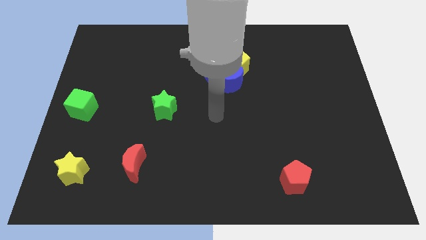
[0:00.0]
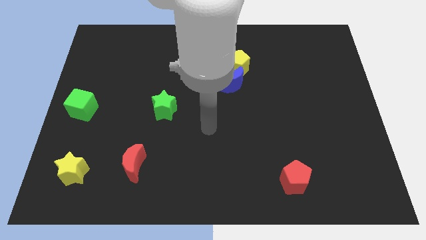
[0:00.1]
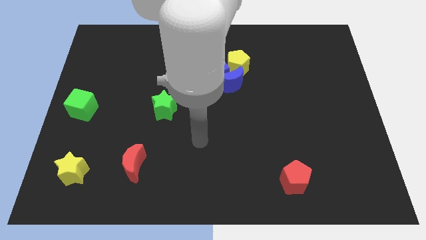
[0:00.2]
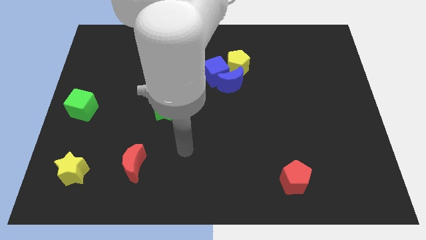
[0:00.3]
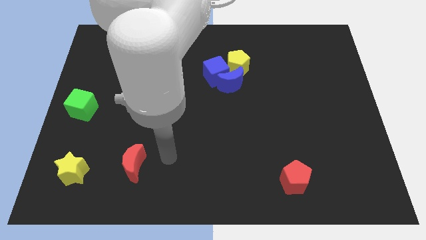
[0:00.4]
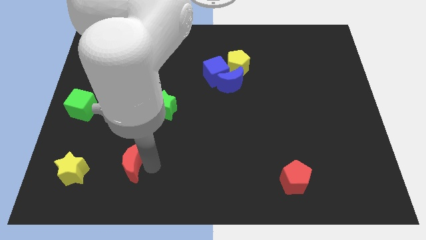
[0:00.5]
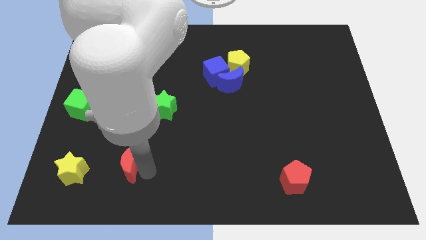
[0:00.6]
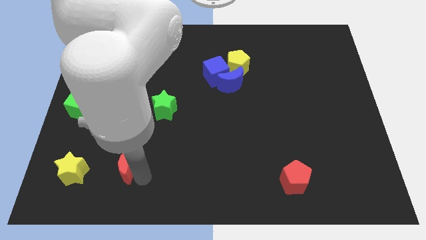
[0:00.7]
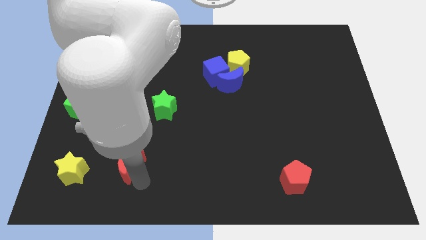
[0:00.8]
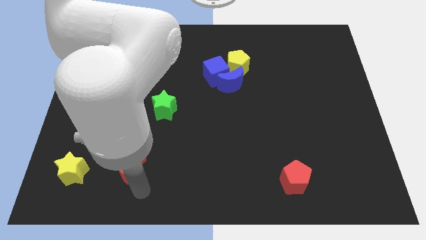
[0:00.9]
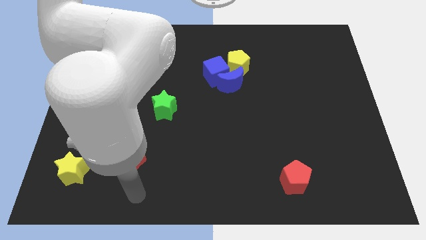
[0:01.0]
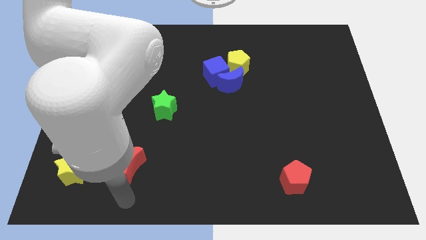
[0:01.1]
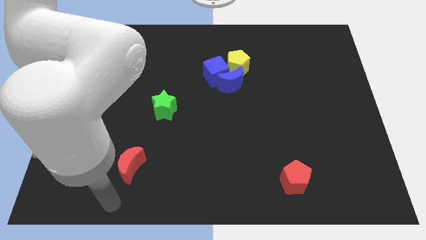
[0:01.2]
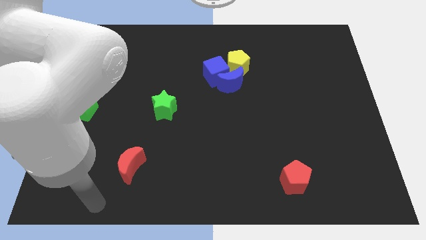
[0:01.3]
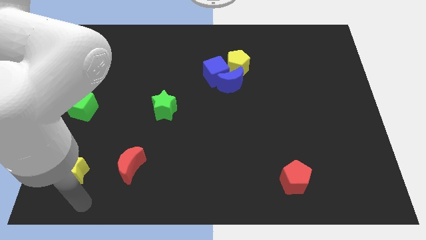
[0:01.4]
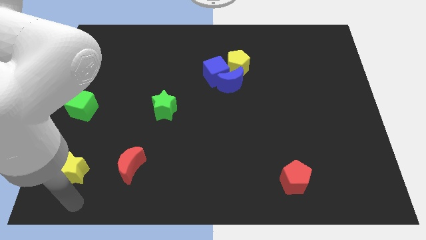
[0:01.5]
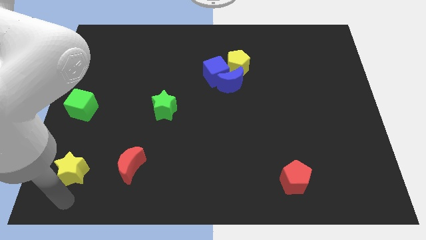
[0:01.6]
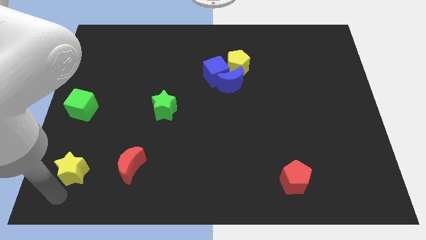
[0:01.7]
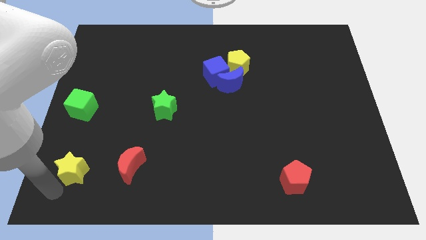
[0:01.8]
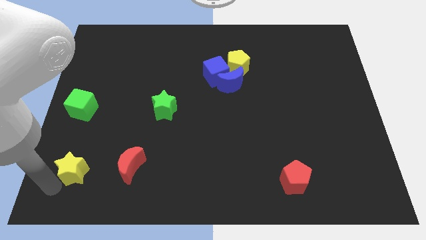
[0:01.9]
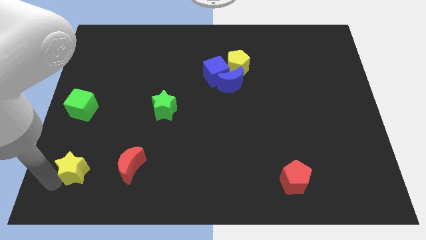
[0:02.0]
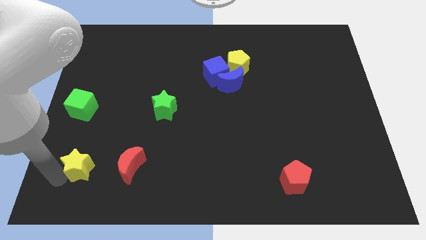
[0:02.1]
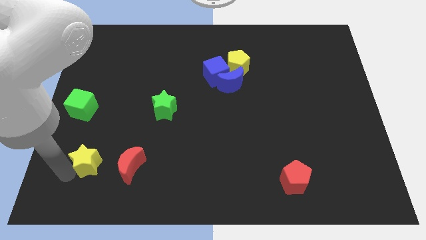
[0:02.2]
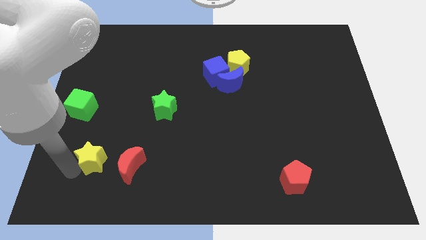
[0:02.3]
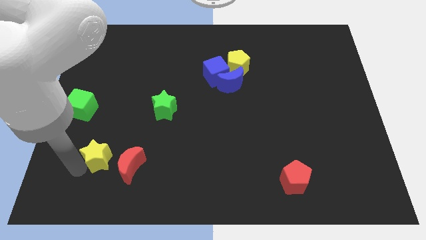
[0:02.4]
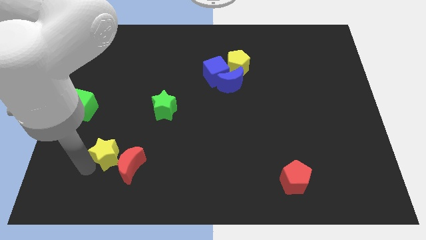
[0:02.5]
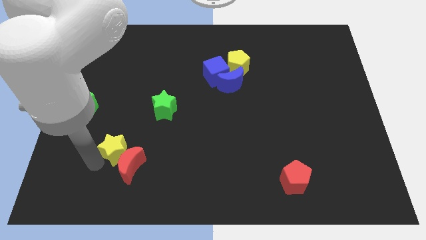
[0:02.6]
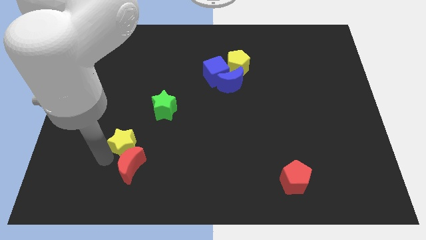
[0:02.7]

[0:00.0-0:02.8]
place the yellow star to the left of the red crescent

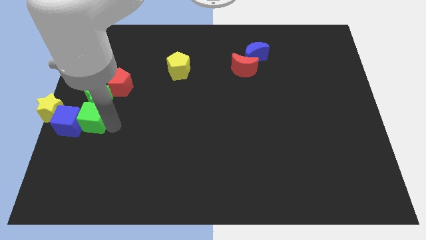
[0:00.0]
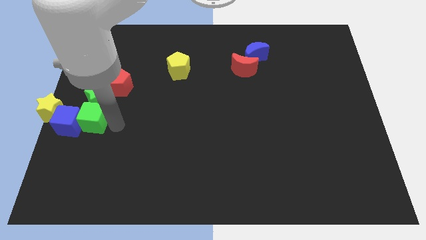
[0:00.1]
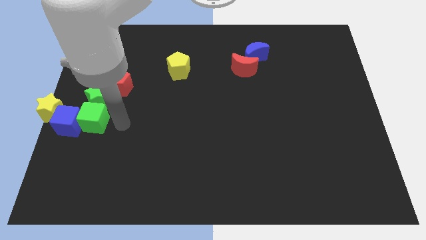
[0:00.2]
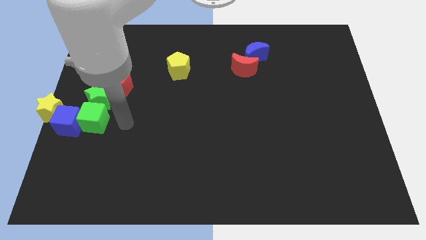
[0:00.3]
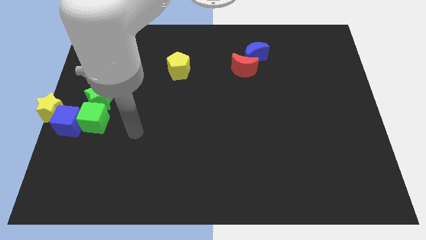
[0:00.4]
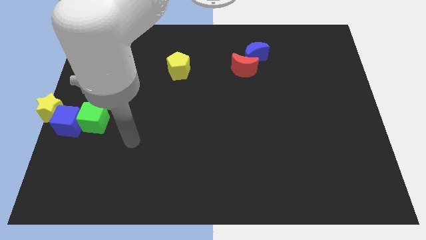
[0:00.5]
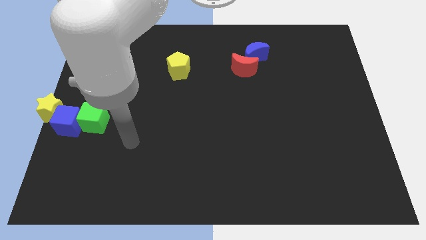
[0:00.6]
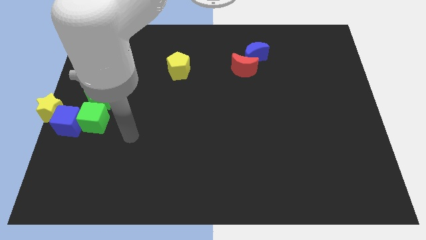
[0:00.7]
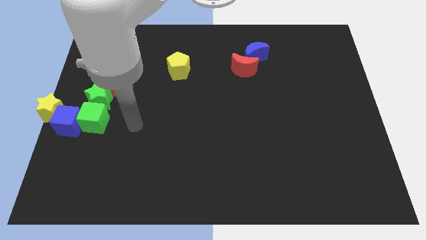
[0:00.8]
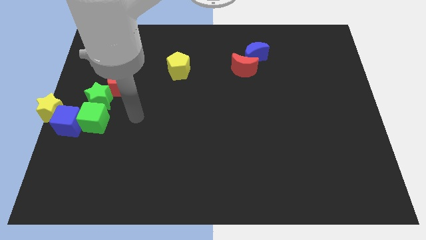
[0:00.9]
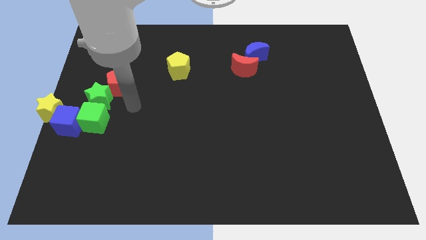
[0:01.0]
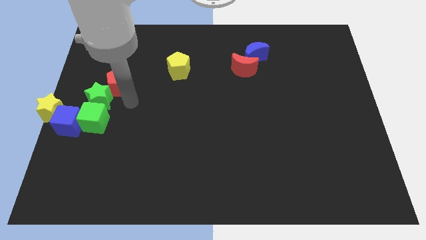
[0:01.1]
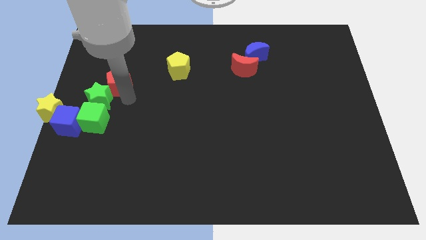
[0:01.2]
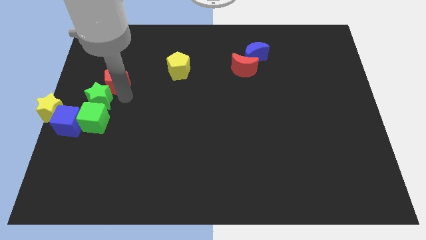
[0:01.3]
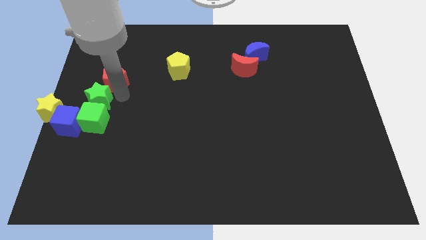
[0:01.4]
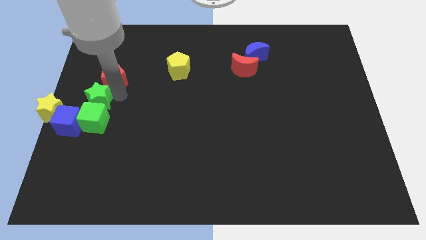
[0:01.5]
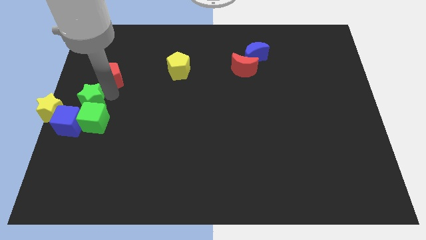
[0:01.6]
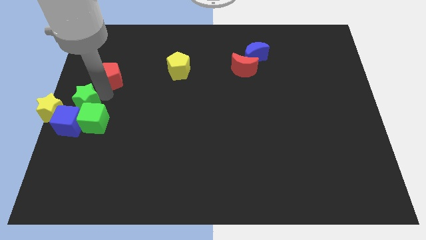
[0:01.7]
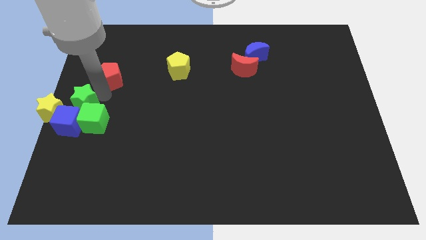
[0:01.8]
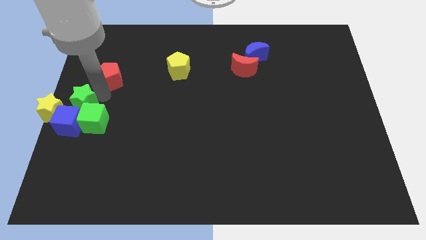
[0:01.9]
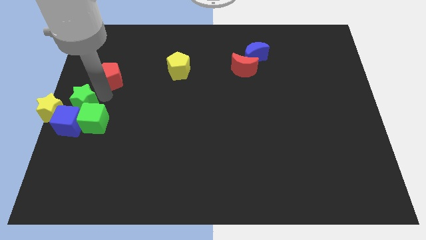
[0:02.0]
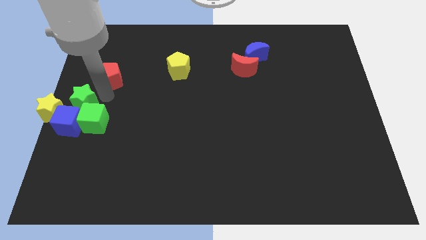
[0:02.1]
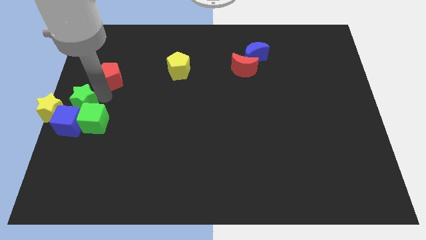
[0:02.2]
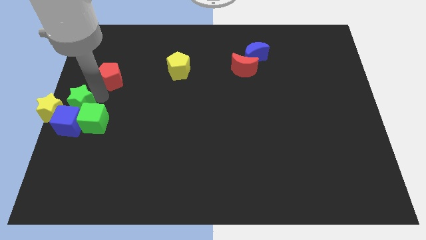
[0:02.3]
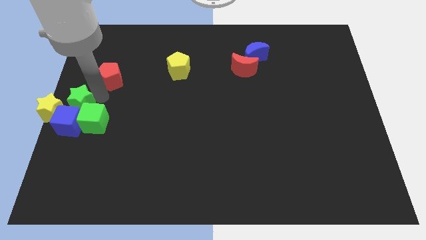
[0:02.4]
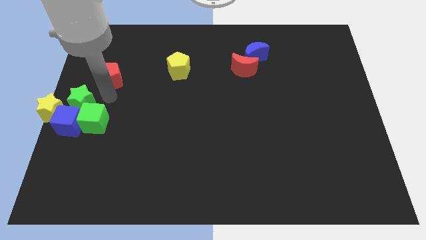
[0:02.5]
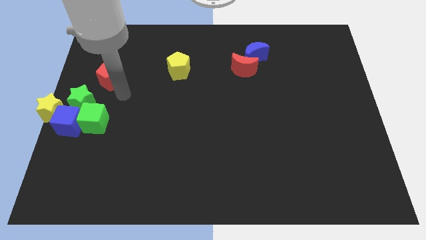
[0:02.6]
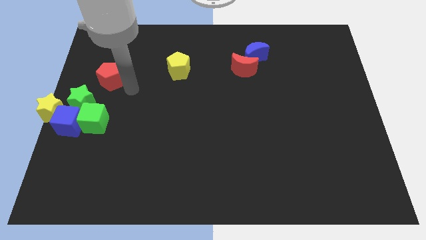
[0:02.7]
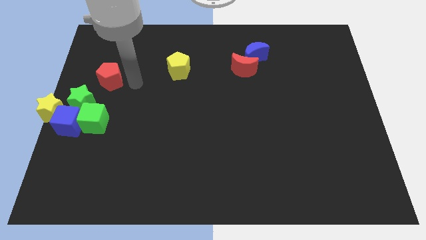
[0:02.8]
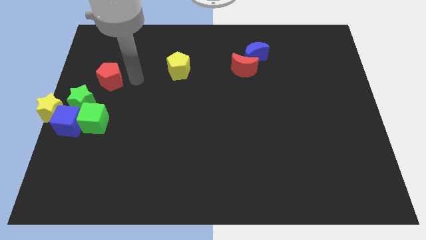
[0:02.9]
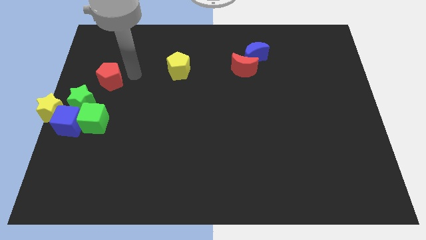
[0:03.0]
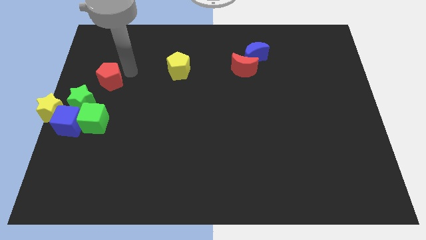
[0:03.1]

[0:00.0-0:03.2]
put the green star at the top of the blue cube

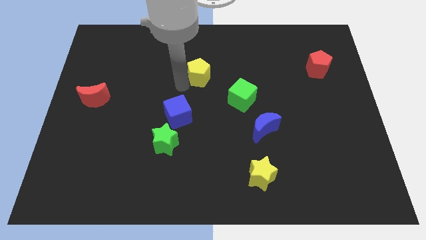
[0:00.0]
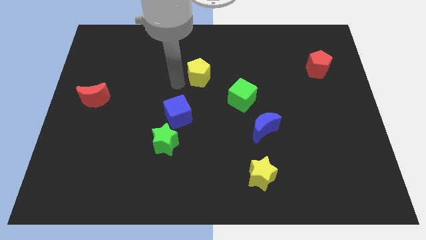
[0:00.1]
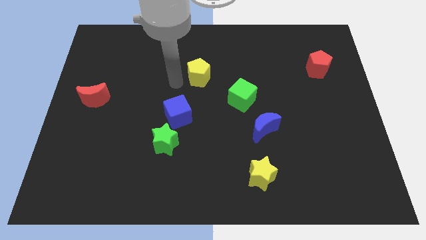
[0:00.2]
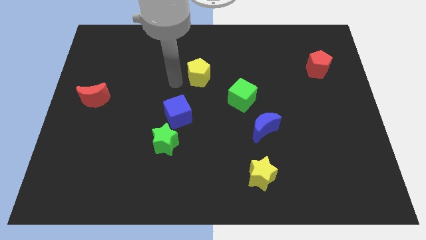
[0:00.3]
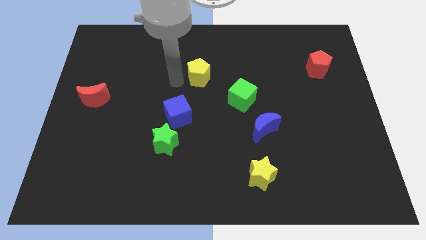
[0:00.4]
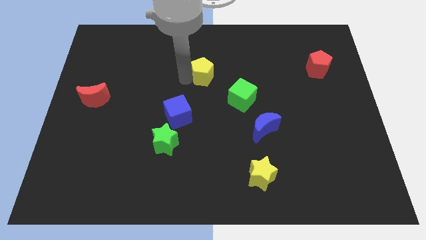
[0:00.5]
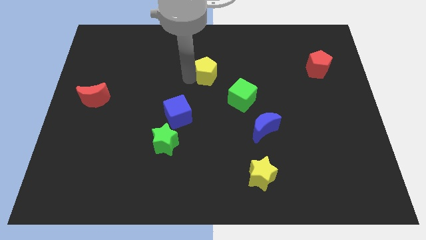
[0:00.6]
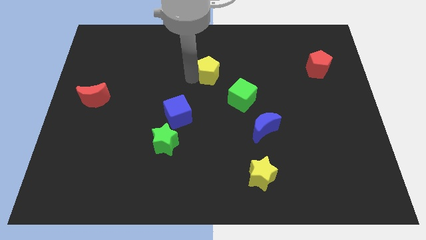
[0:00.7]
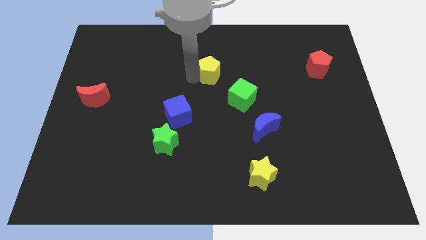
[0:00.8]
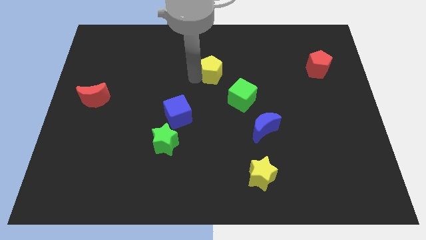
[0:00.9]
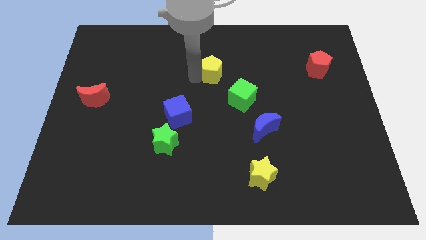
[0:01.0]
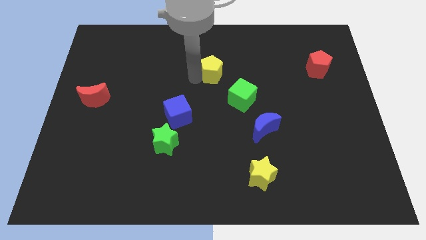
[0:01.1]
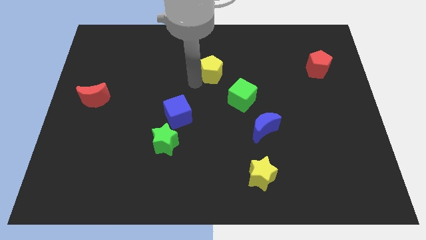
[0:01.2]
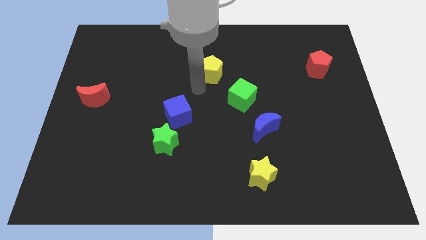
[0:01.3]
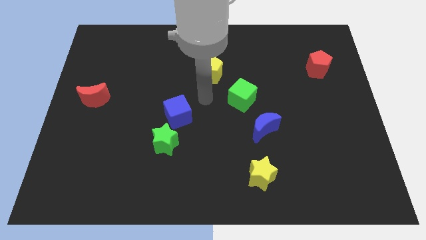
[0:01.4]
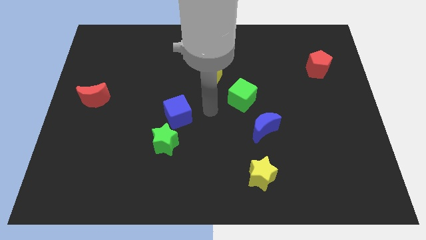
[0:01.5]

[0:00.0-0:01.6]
place the arm below the yellow pentagon

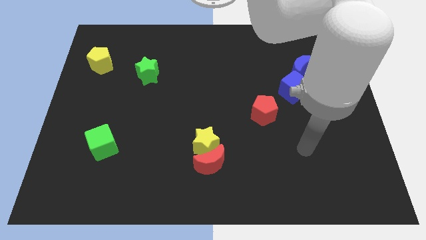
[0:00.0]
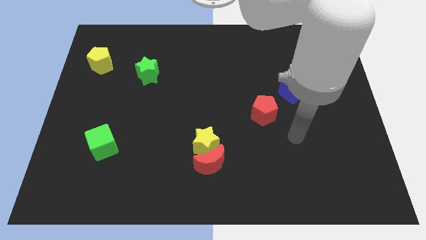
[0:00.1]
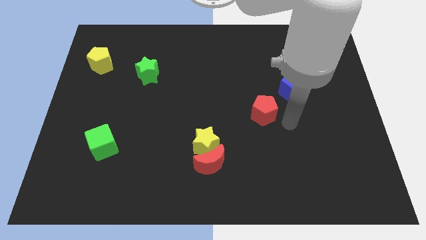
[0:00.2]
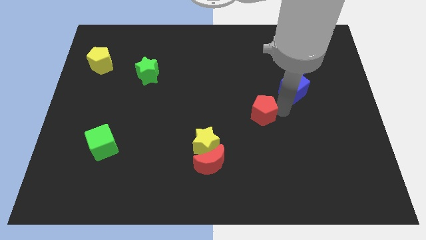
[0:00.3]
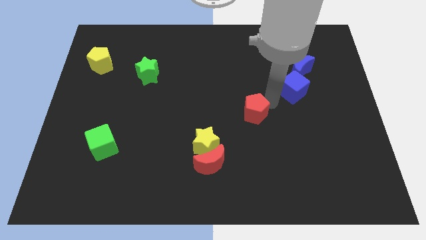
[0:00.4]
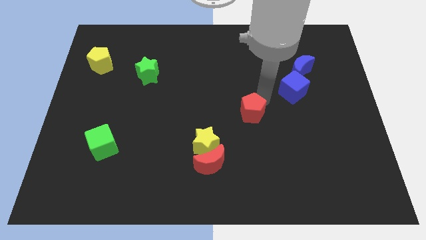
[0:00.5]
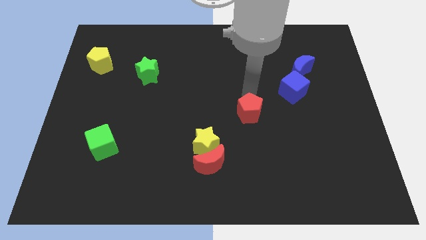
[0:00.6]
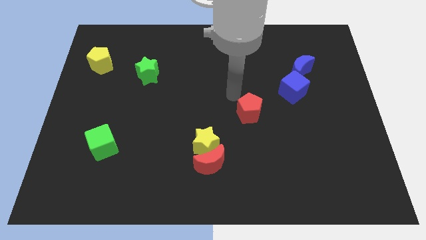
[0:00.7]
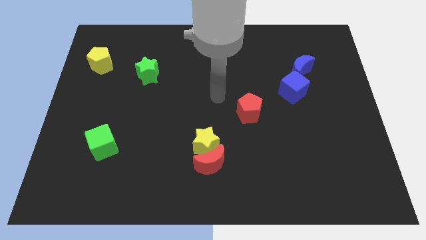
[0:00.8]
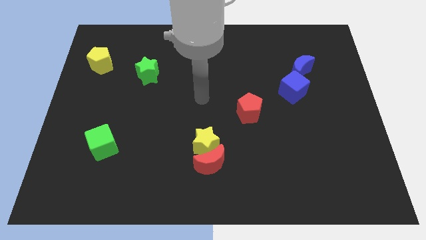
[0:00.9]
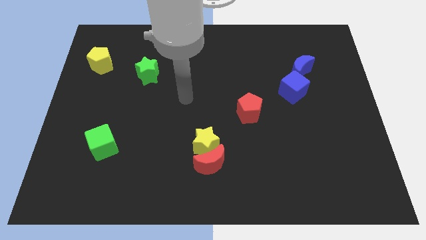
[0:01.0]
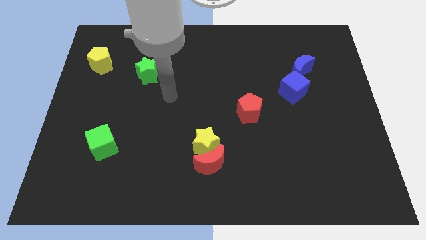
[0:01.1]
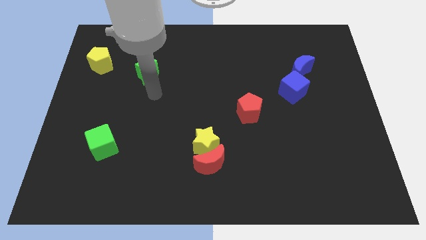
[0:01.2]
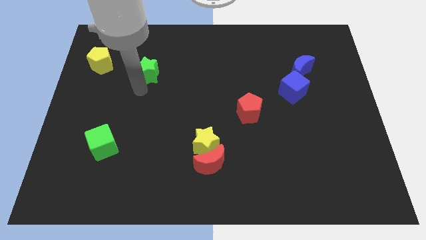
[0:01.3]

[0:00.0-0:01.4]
slightly push the red pentagon towards the bottom
